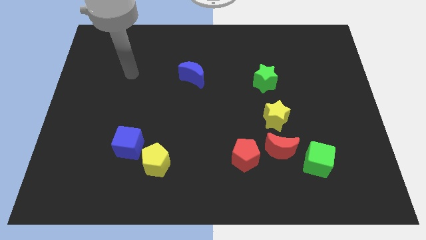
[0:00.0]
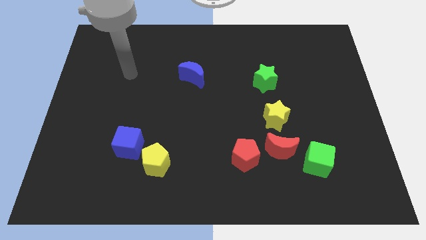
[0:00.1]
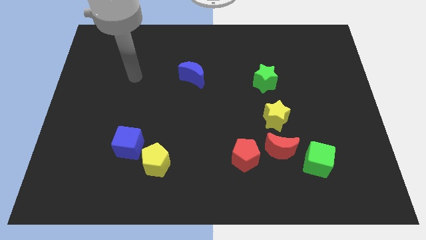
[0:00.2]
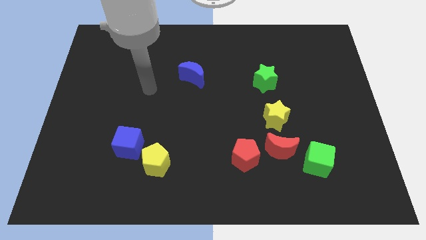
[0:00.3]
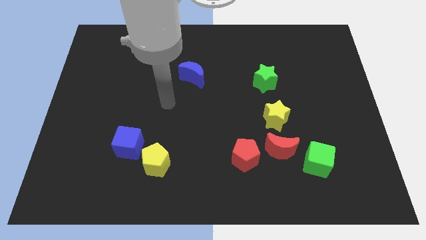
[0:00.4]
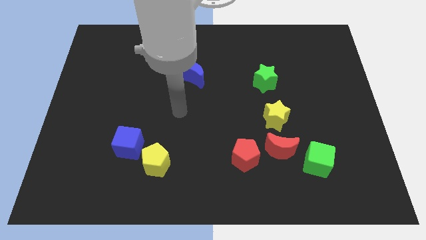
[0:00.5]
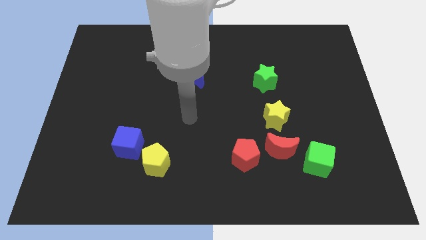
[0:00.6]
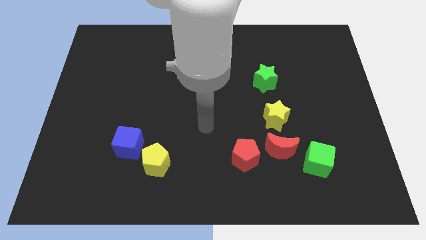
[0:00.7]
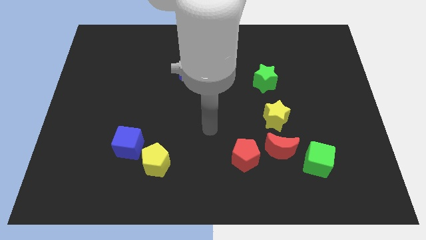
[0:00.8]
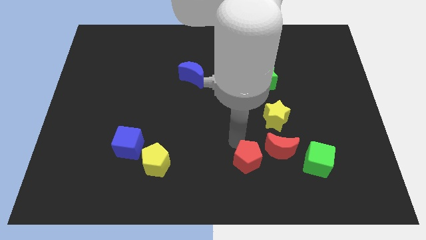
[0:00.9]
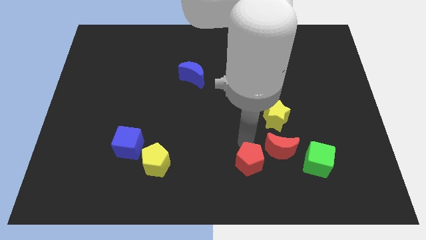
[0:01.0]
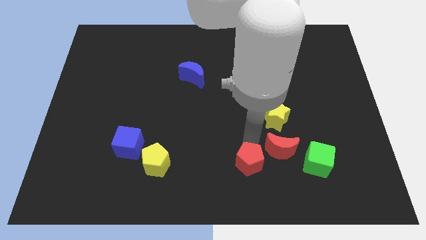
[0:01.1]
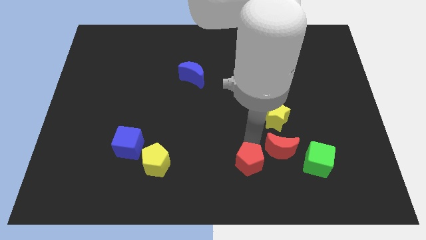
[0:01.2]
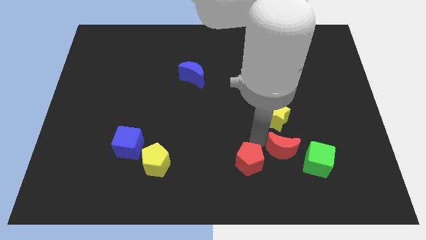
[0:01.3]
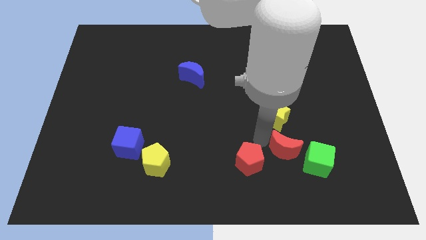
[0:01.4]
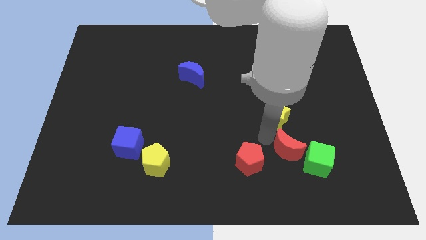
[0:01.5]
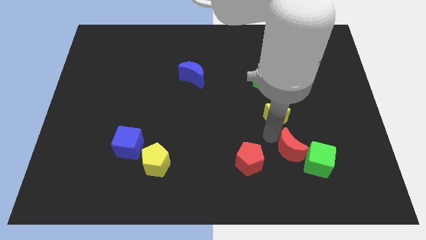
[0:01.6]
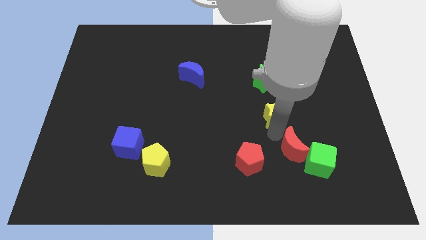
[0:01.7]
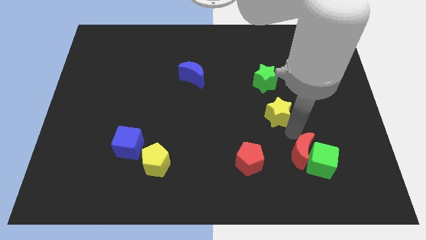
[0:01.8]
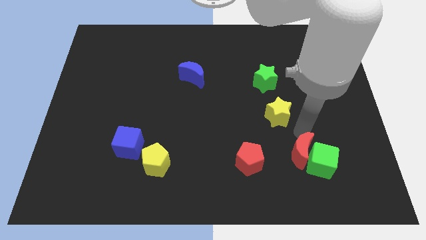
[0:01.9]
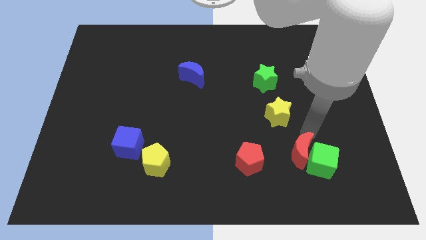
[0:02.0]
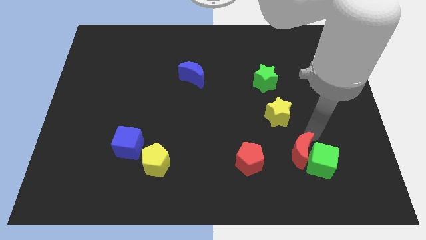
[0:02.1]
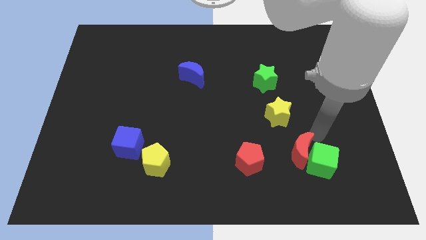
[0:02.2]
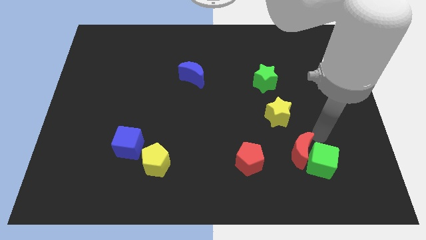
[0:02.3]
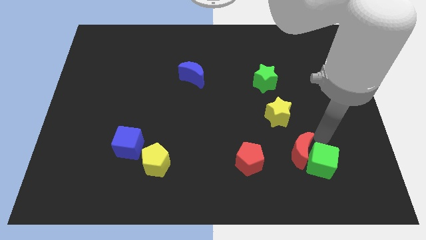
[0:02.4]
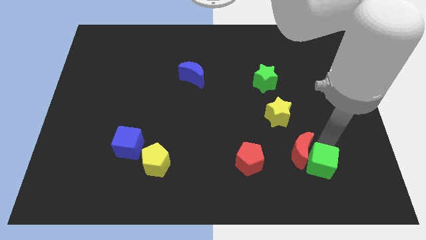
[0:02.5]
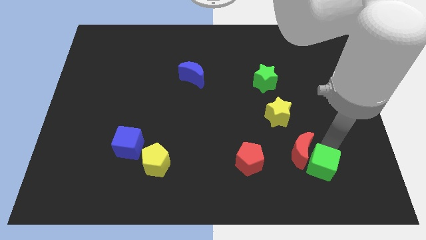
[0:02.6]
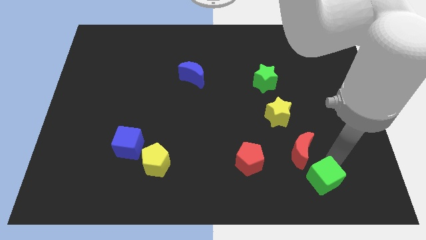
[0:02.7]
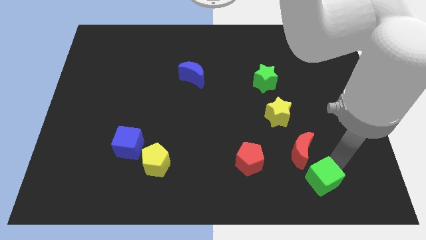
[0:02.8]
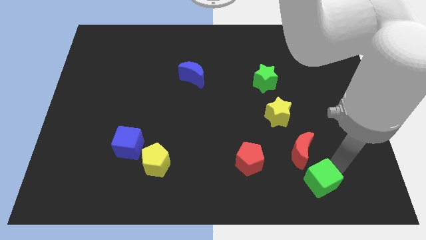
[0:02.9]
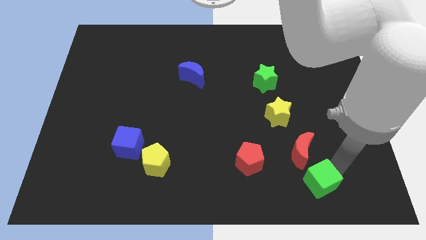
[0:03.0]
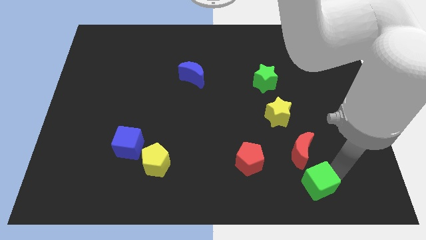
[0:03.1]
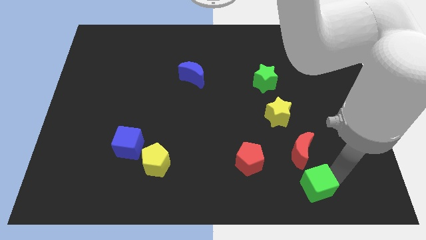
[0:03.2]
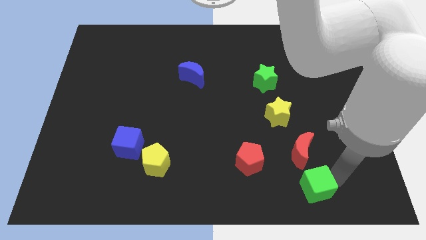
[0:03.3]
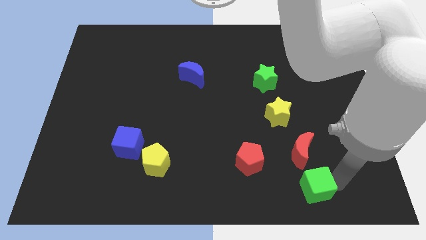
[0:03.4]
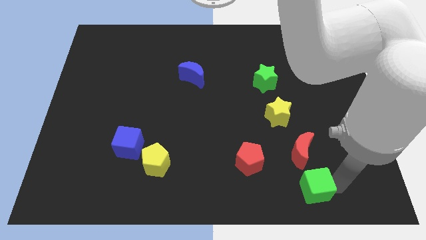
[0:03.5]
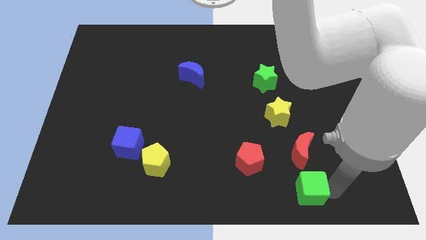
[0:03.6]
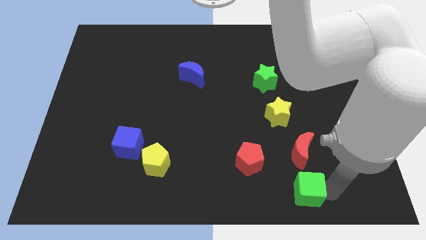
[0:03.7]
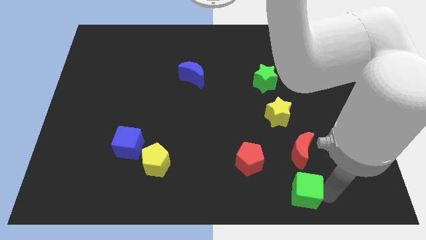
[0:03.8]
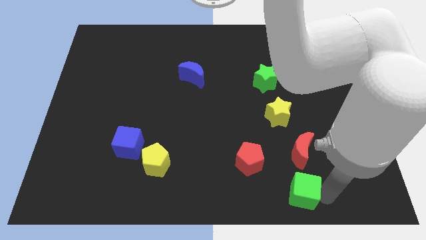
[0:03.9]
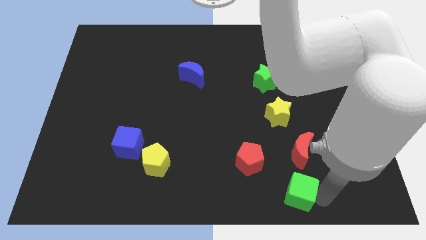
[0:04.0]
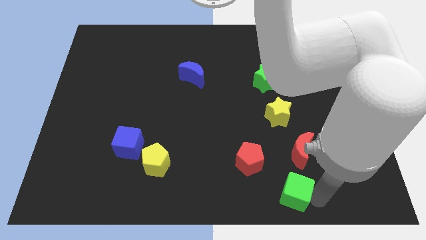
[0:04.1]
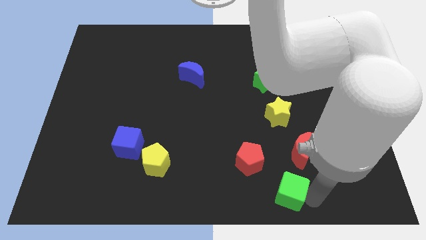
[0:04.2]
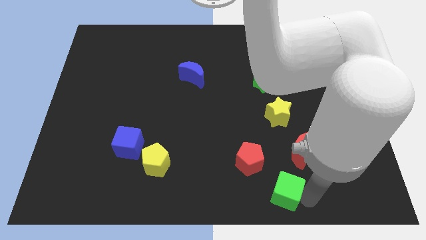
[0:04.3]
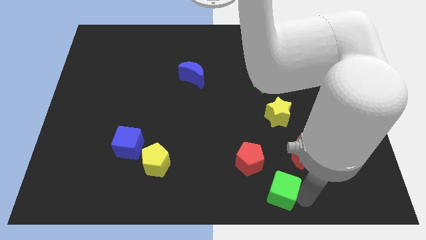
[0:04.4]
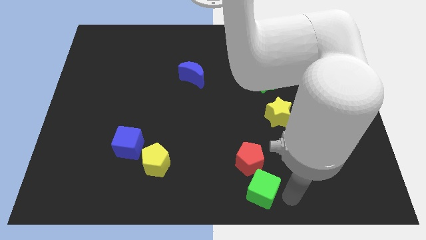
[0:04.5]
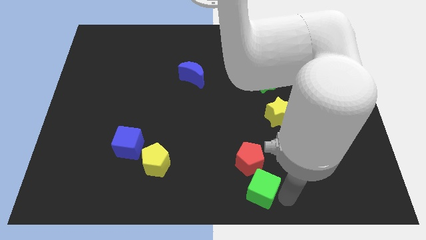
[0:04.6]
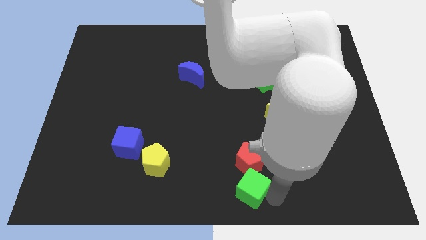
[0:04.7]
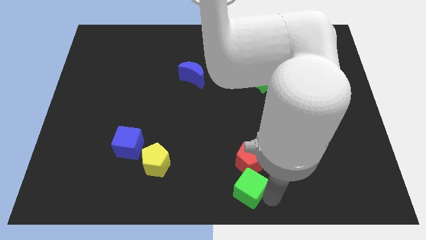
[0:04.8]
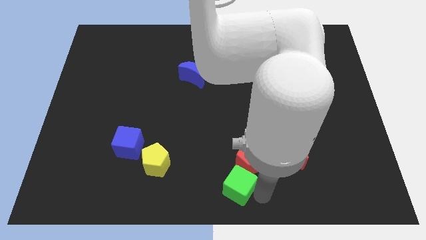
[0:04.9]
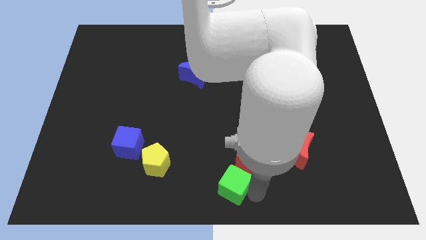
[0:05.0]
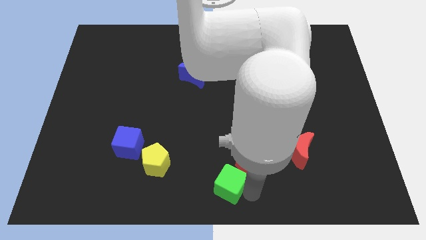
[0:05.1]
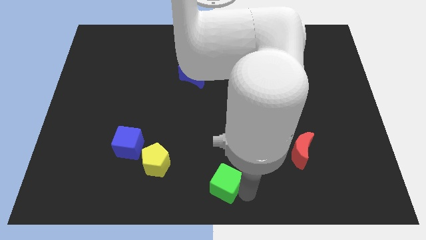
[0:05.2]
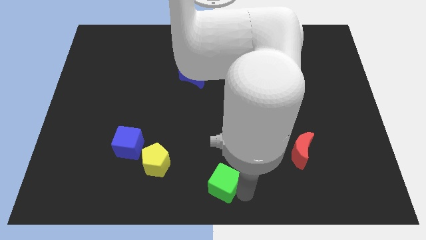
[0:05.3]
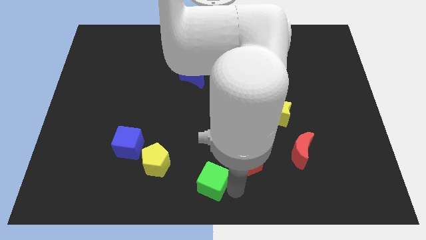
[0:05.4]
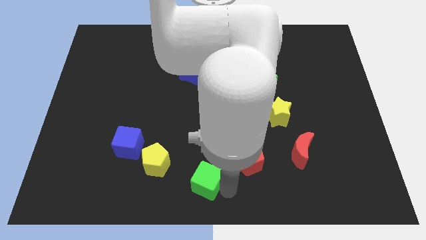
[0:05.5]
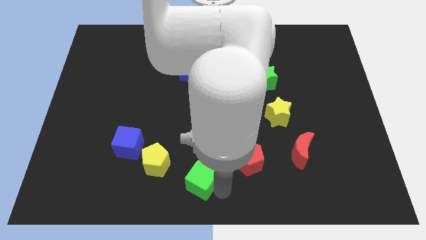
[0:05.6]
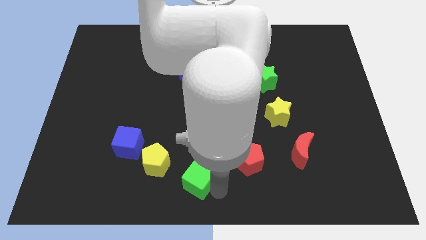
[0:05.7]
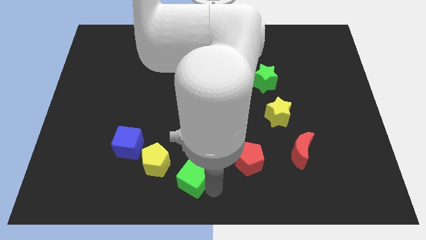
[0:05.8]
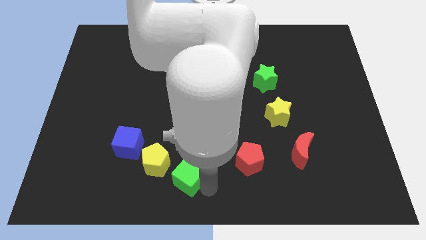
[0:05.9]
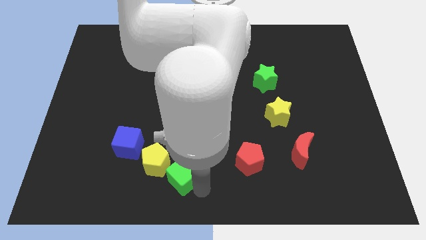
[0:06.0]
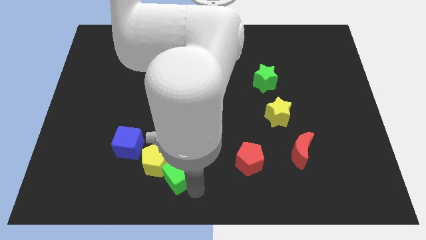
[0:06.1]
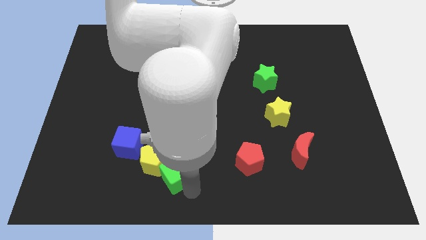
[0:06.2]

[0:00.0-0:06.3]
put the green cube next to the yellow pentagon

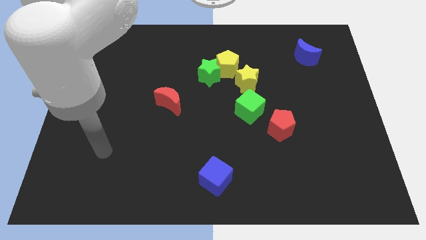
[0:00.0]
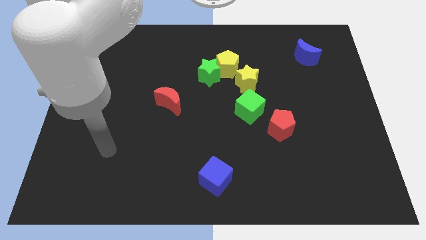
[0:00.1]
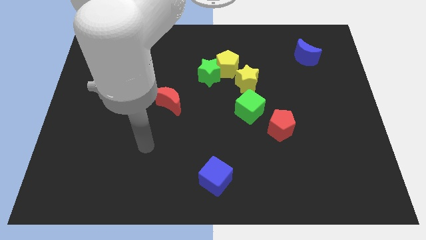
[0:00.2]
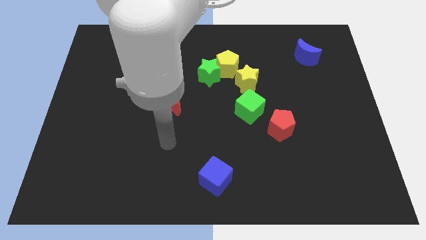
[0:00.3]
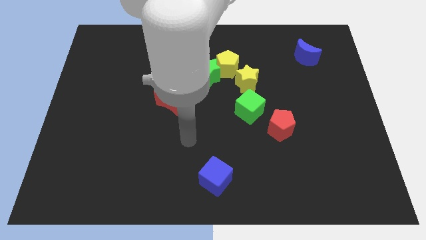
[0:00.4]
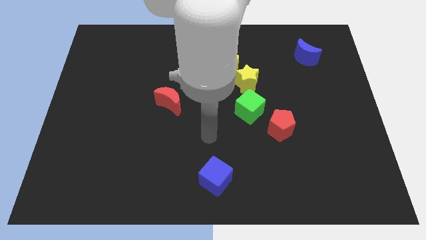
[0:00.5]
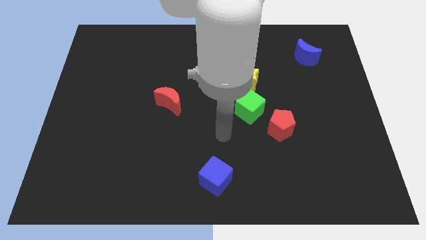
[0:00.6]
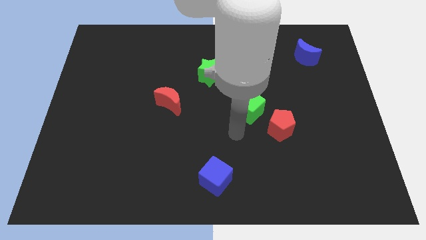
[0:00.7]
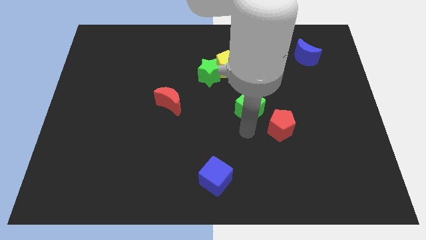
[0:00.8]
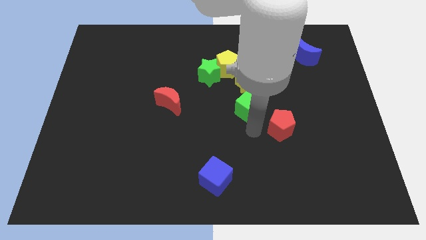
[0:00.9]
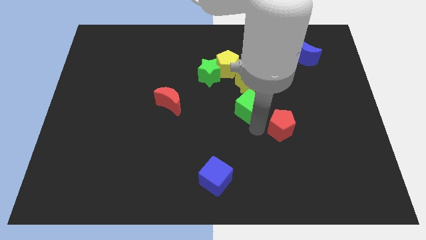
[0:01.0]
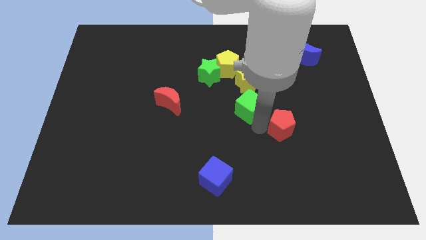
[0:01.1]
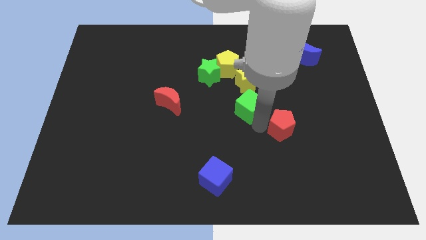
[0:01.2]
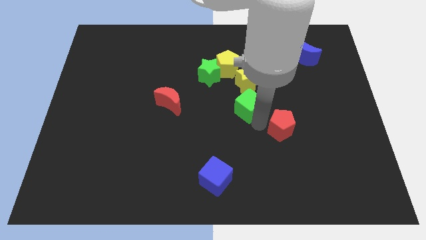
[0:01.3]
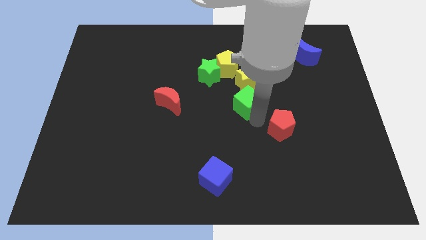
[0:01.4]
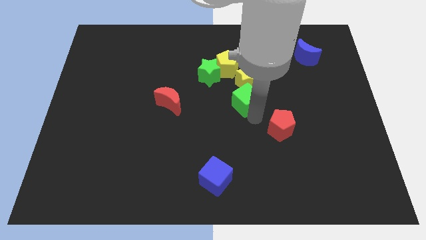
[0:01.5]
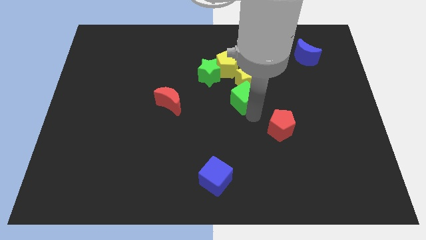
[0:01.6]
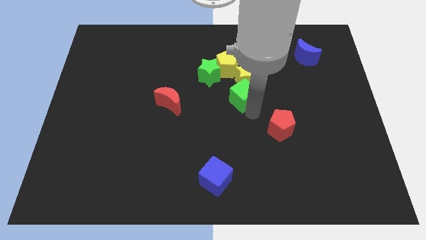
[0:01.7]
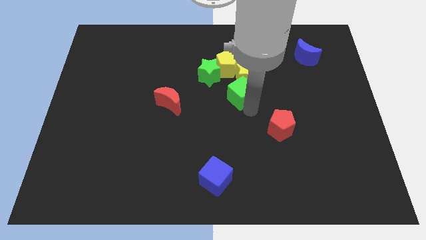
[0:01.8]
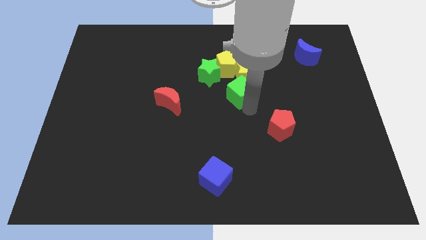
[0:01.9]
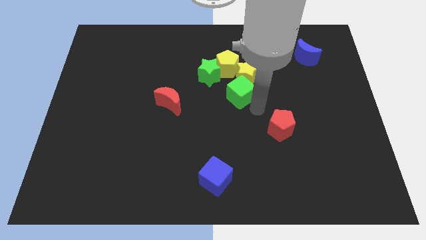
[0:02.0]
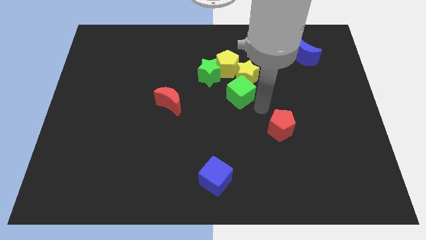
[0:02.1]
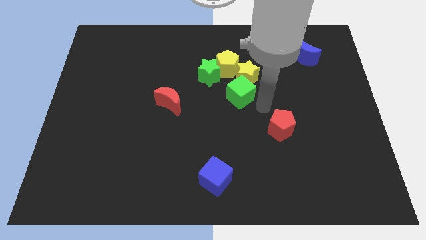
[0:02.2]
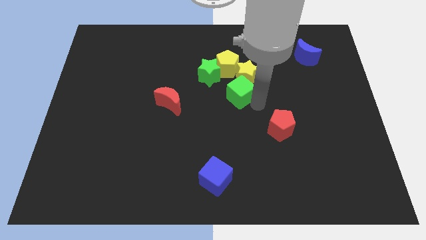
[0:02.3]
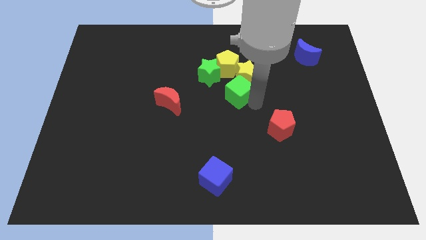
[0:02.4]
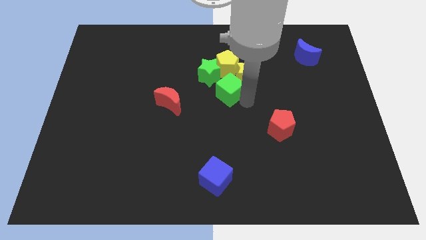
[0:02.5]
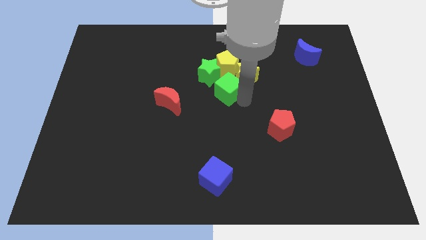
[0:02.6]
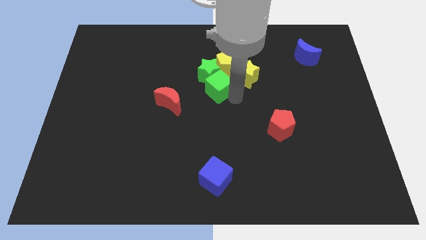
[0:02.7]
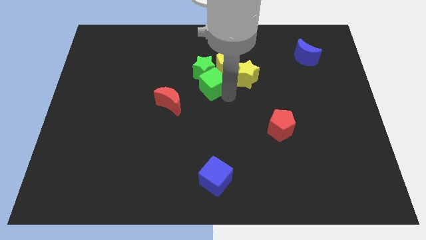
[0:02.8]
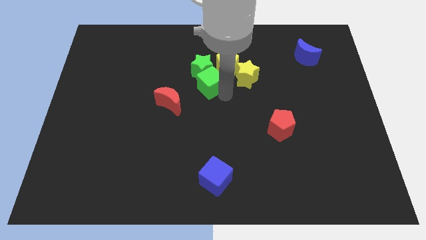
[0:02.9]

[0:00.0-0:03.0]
push the green cube towards the green star
